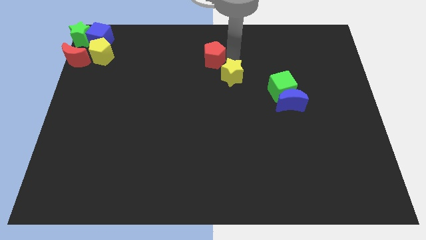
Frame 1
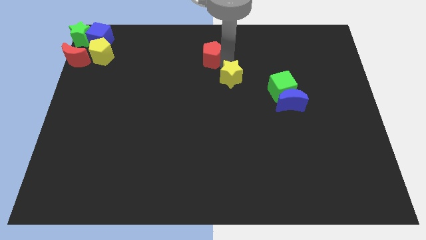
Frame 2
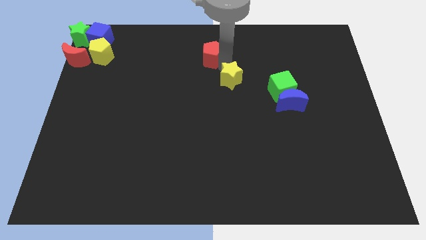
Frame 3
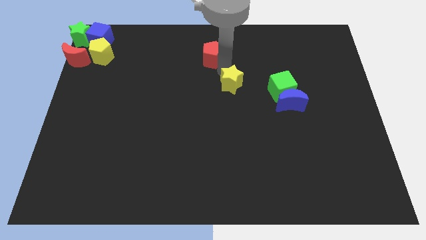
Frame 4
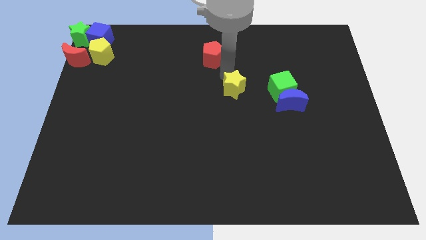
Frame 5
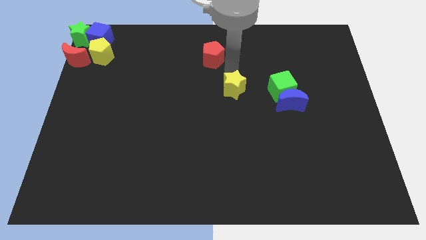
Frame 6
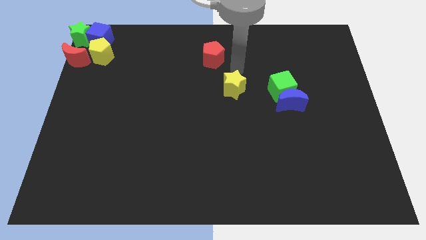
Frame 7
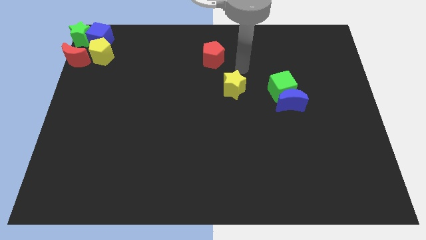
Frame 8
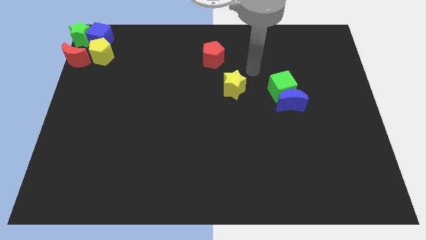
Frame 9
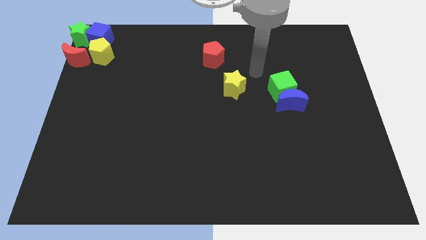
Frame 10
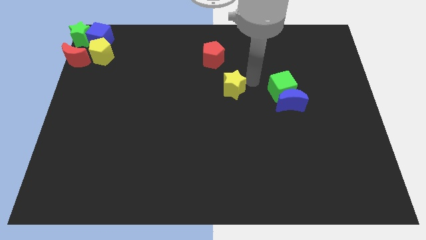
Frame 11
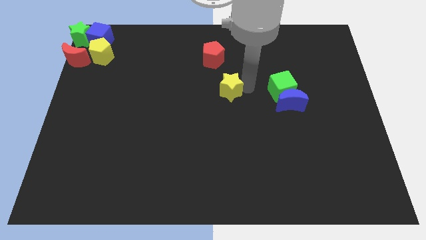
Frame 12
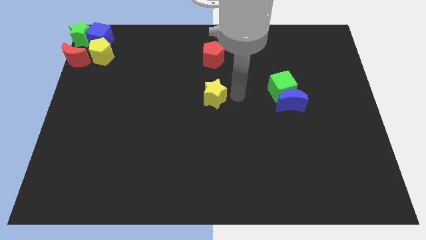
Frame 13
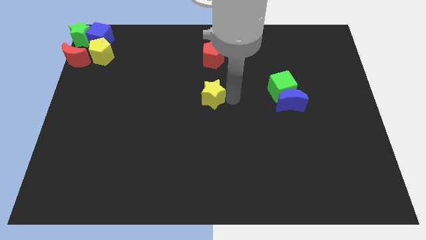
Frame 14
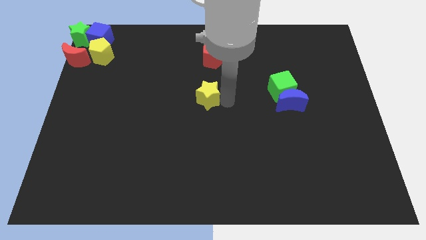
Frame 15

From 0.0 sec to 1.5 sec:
separate the yellow star and the red pentagon

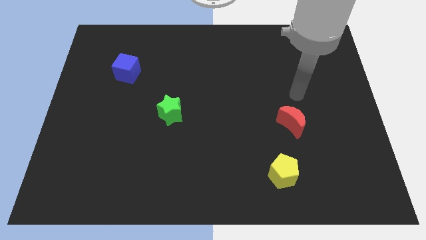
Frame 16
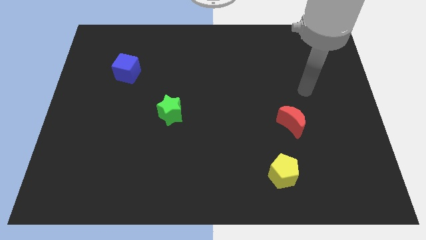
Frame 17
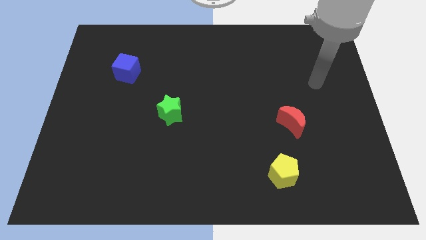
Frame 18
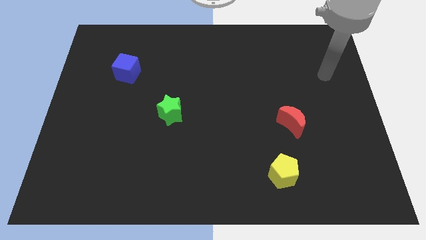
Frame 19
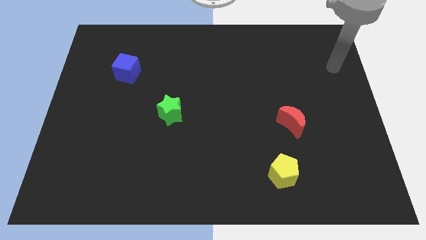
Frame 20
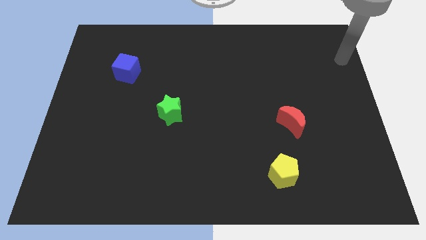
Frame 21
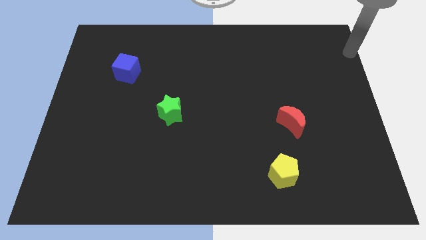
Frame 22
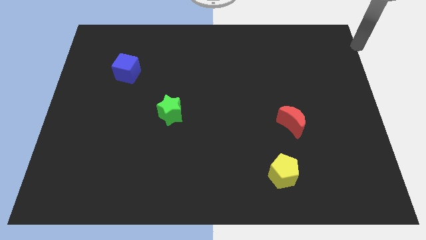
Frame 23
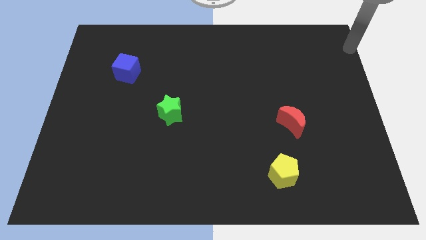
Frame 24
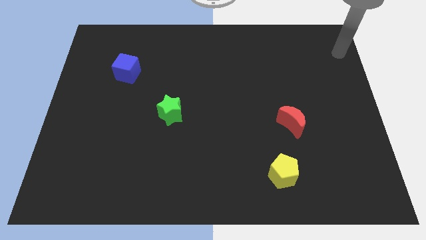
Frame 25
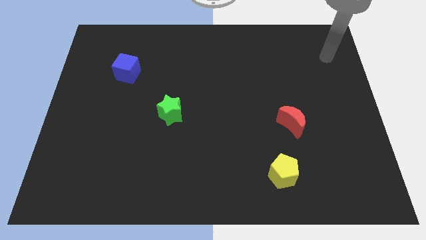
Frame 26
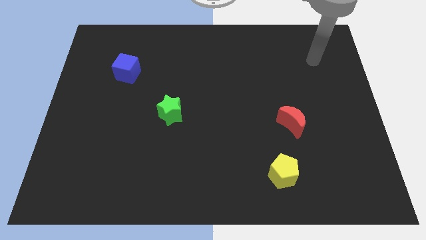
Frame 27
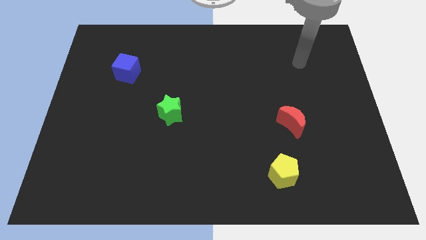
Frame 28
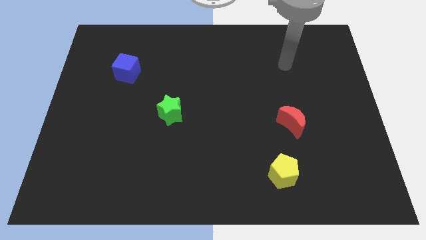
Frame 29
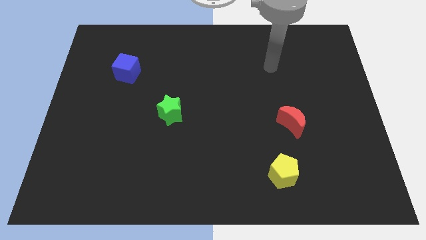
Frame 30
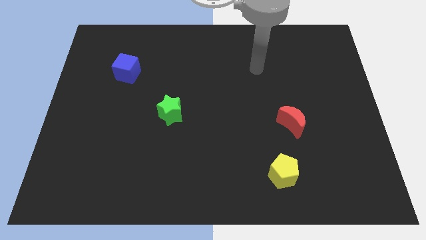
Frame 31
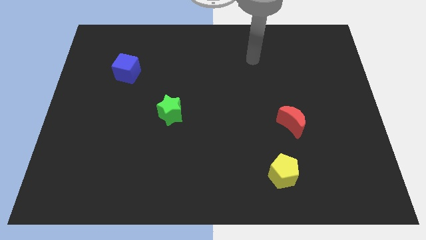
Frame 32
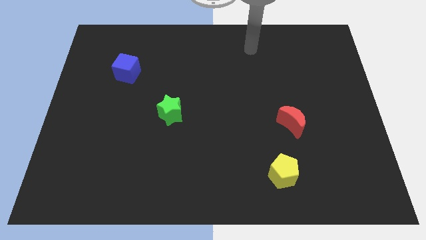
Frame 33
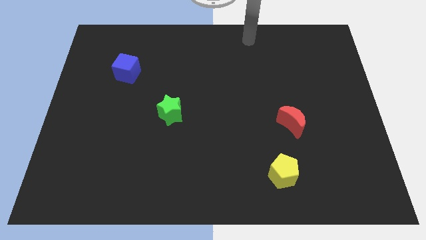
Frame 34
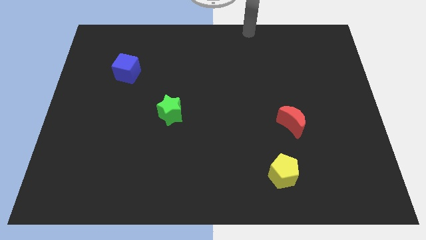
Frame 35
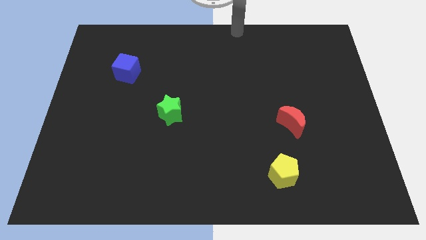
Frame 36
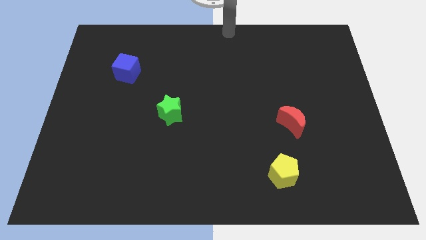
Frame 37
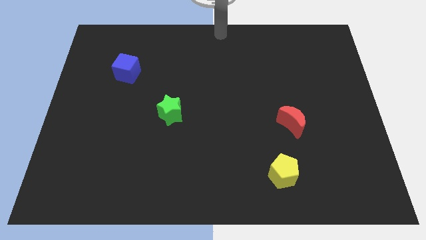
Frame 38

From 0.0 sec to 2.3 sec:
go and place your arm at the top center of the board

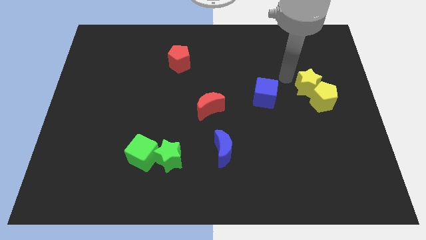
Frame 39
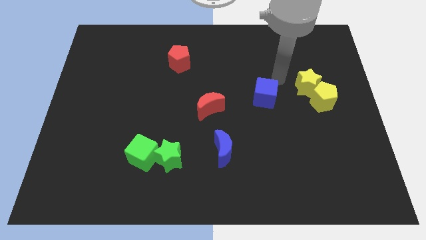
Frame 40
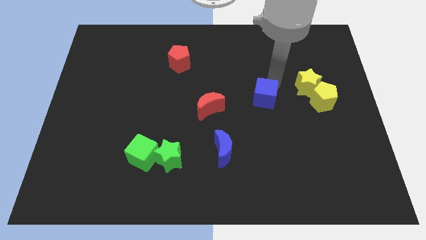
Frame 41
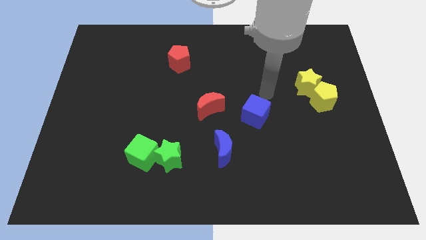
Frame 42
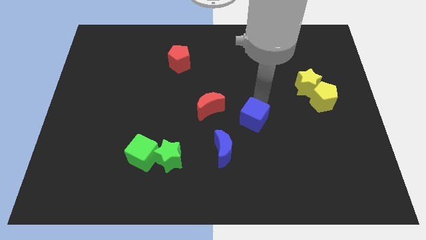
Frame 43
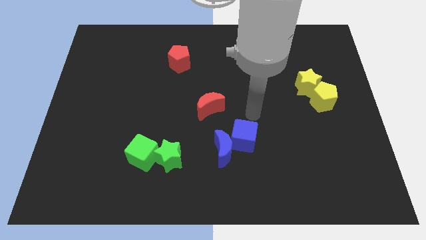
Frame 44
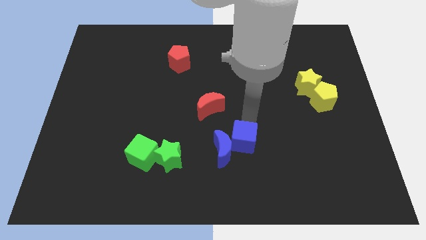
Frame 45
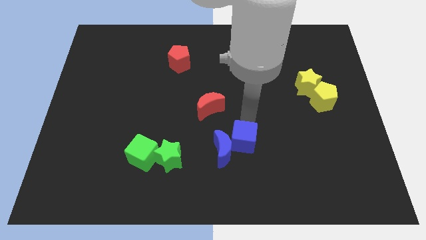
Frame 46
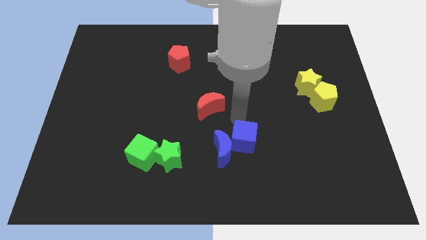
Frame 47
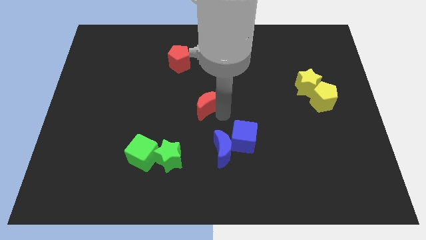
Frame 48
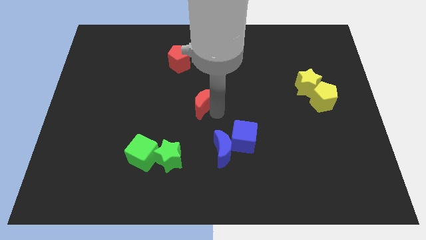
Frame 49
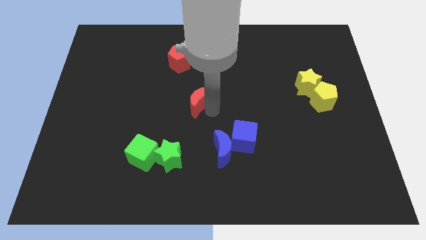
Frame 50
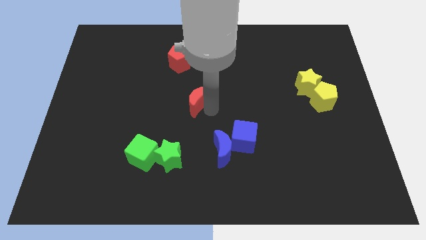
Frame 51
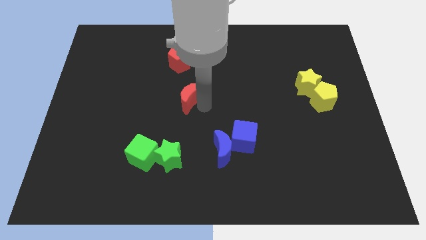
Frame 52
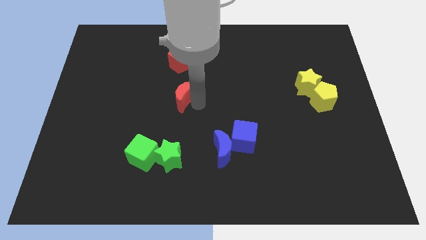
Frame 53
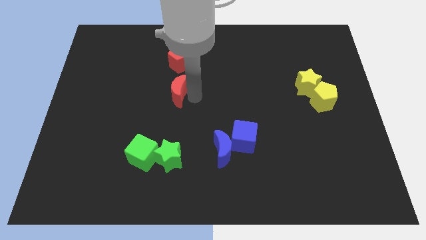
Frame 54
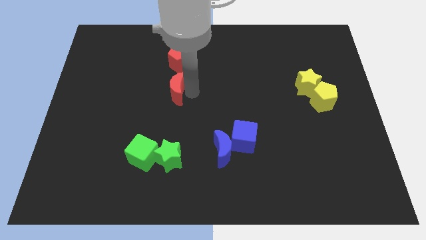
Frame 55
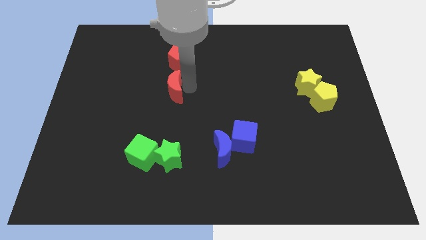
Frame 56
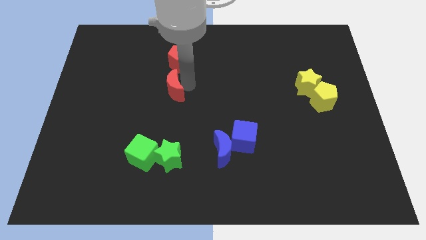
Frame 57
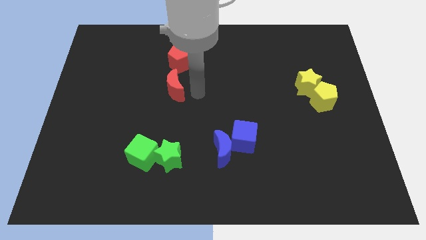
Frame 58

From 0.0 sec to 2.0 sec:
move the blue cube on to the blue moon

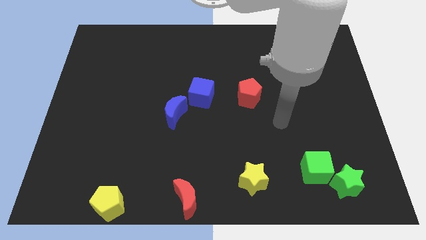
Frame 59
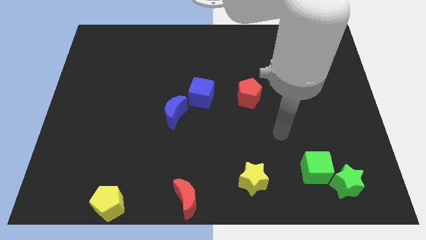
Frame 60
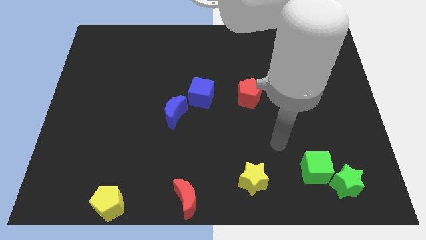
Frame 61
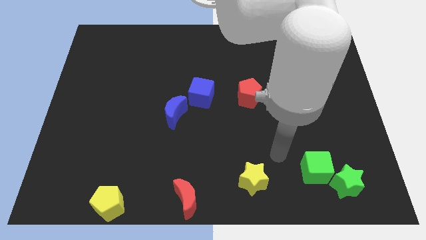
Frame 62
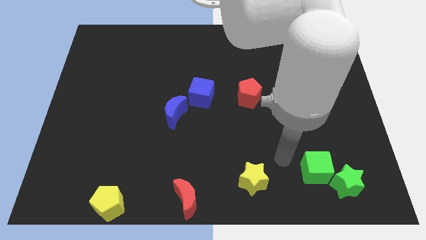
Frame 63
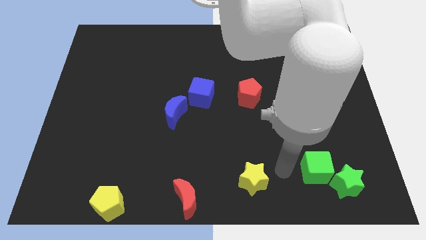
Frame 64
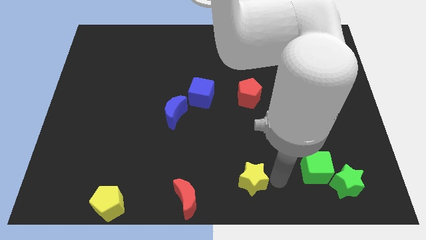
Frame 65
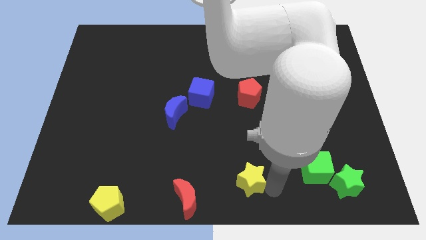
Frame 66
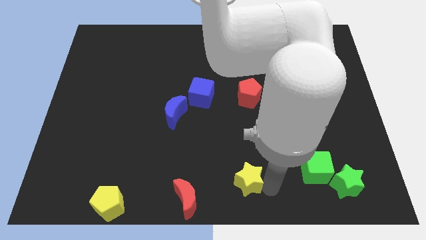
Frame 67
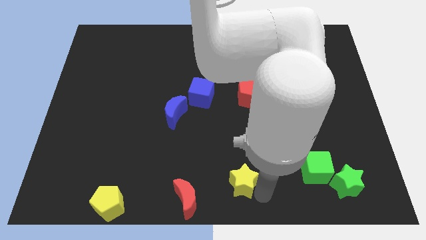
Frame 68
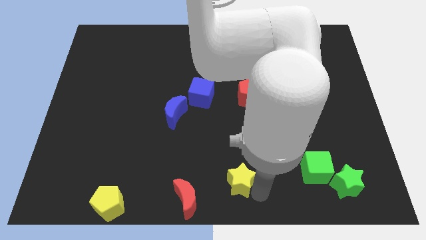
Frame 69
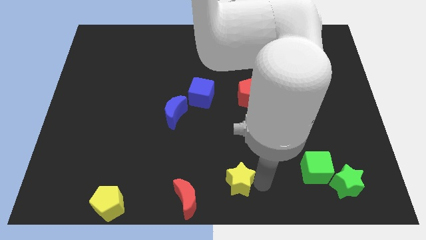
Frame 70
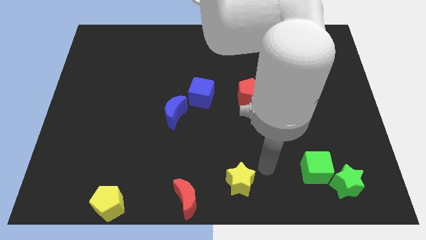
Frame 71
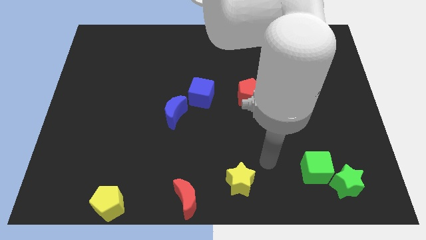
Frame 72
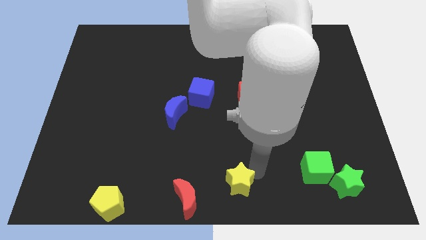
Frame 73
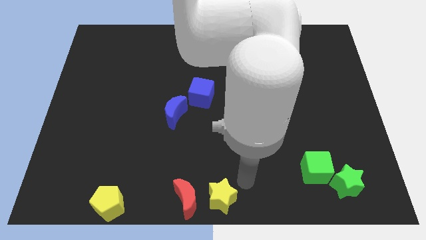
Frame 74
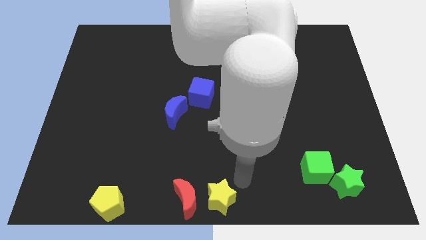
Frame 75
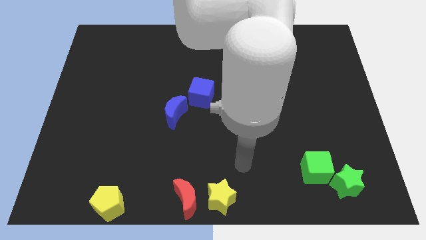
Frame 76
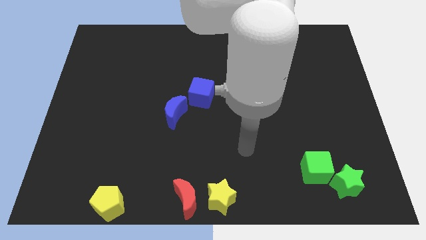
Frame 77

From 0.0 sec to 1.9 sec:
place the yellow star right to the red moon

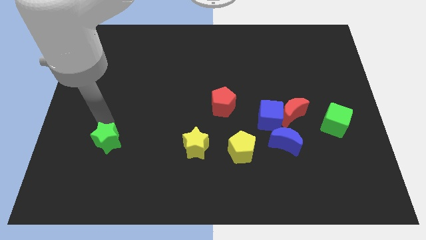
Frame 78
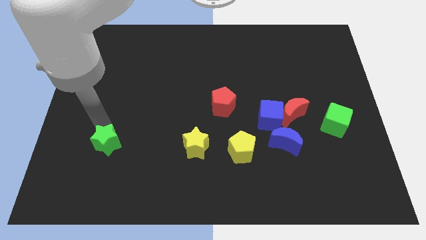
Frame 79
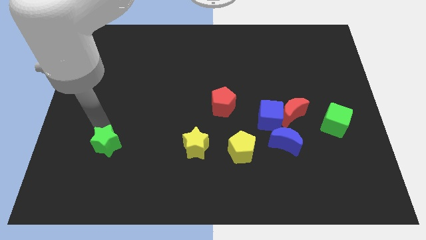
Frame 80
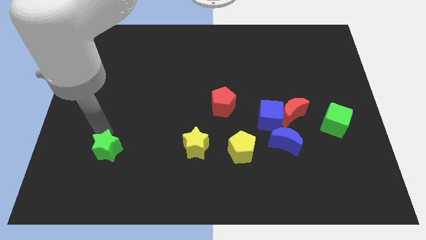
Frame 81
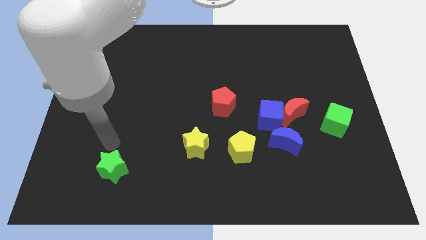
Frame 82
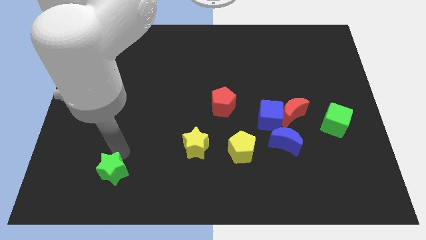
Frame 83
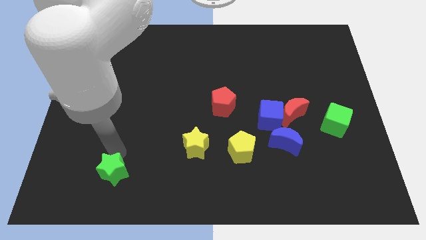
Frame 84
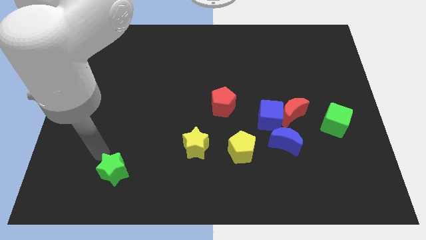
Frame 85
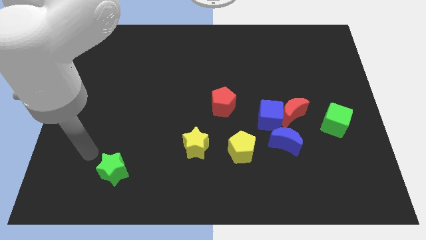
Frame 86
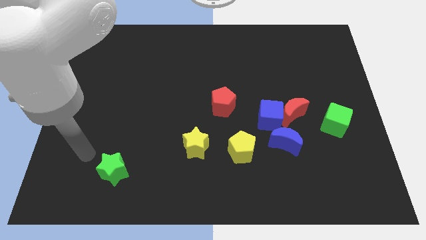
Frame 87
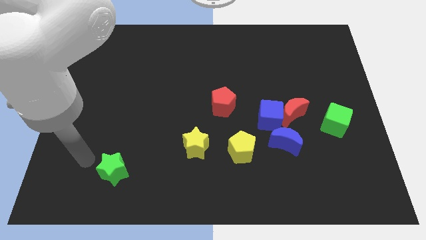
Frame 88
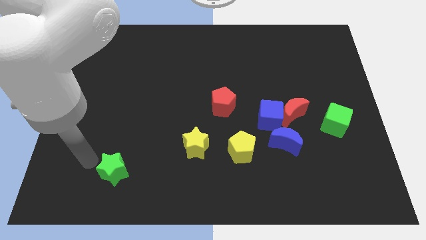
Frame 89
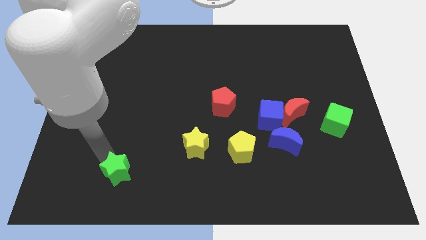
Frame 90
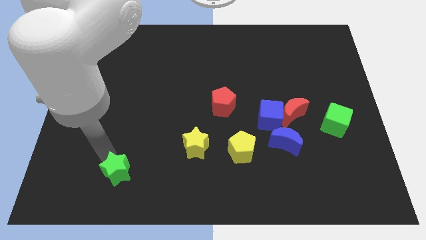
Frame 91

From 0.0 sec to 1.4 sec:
move the green star to the bottom of the board
